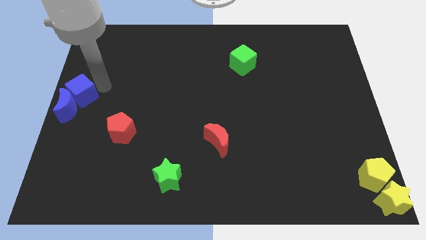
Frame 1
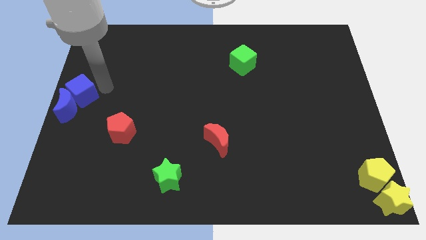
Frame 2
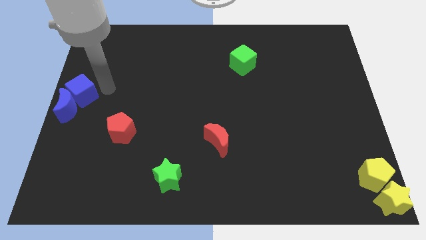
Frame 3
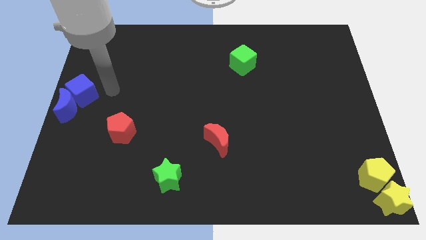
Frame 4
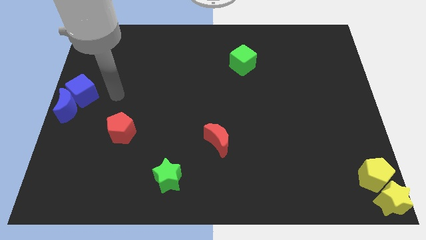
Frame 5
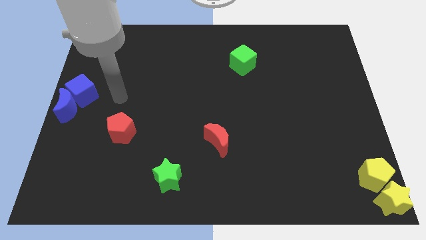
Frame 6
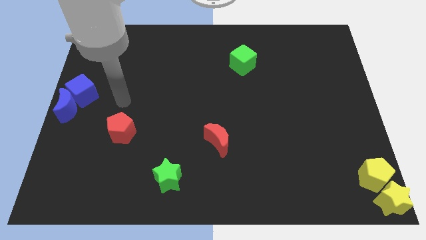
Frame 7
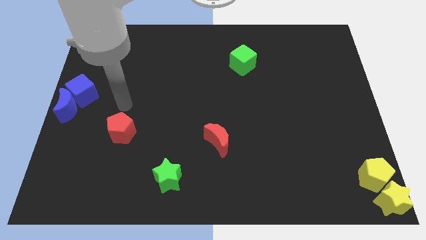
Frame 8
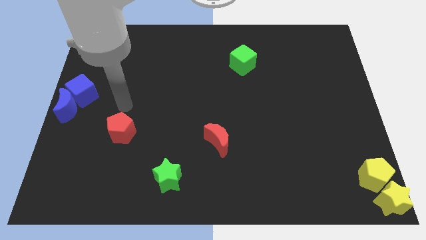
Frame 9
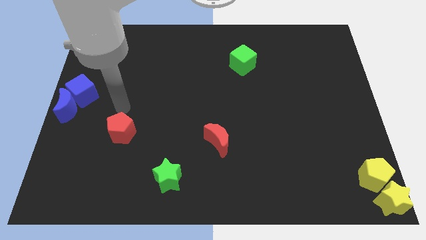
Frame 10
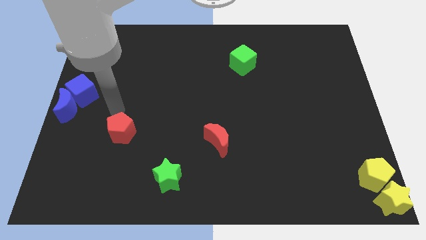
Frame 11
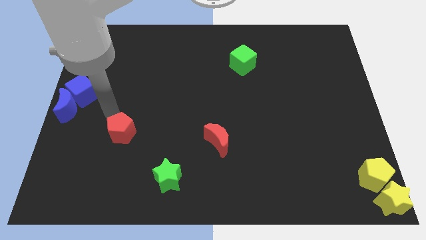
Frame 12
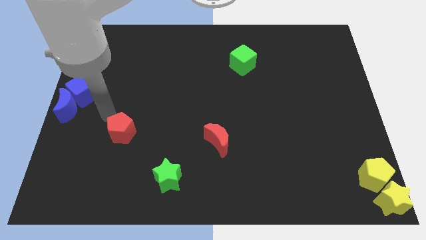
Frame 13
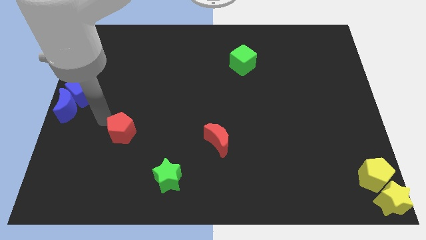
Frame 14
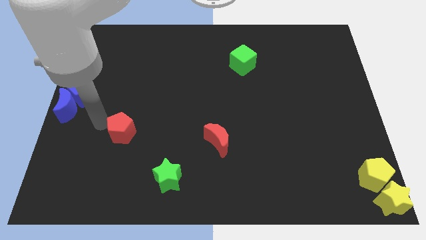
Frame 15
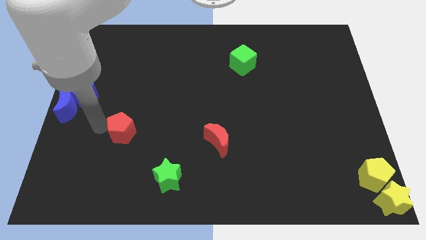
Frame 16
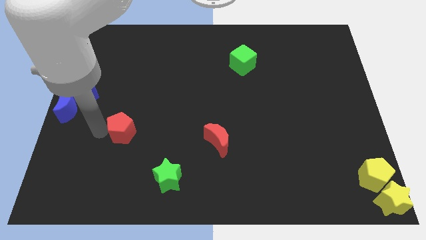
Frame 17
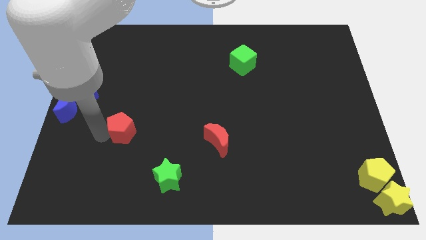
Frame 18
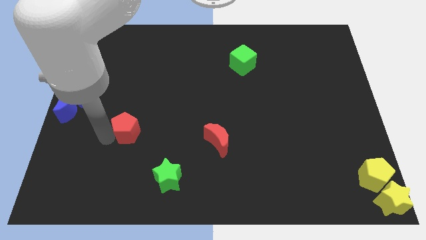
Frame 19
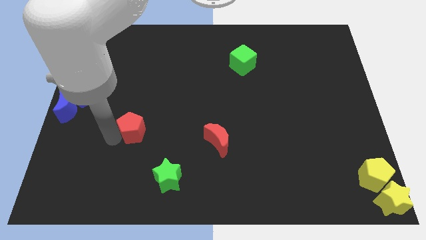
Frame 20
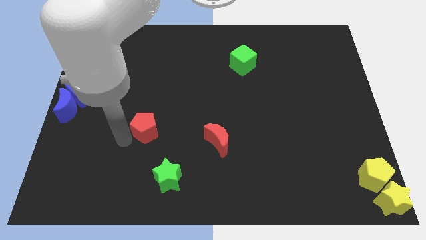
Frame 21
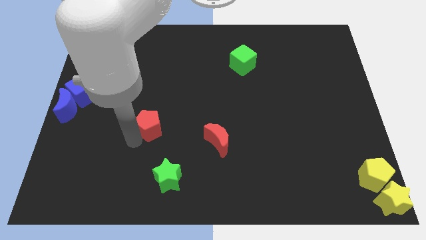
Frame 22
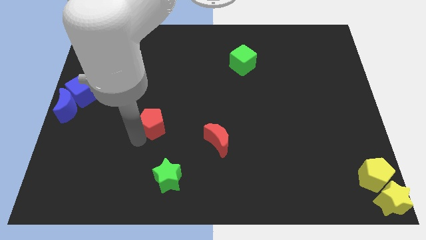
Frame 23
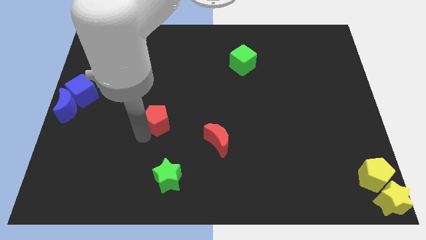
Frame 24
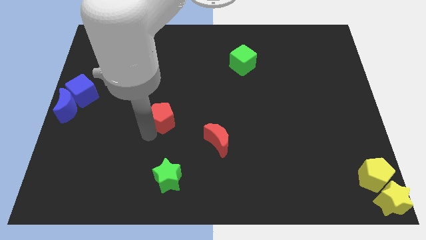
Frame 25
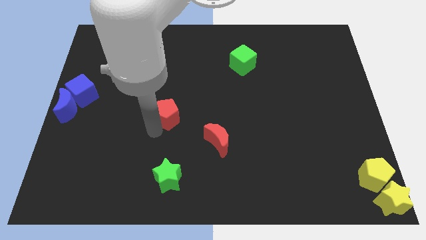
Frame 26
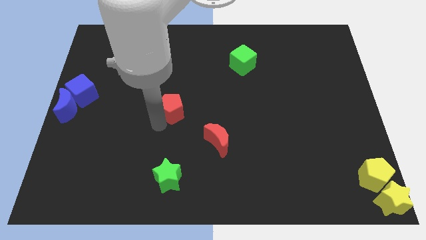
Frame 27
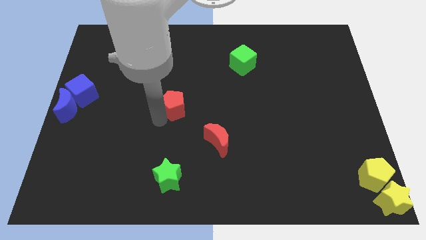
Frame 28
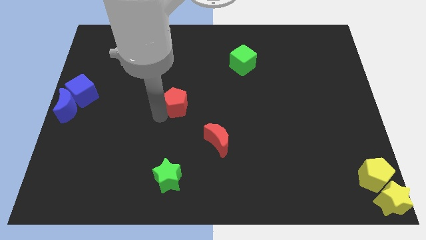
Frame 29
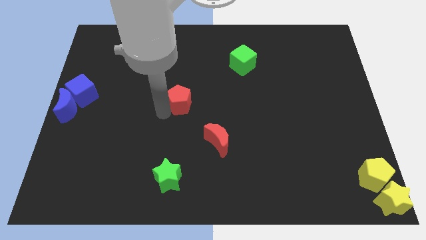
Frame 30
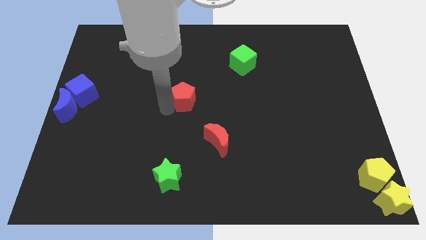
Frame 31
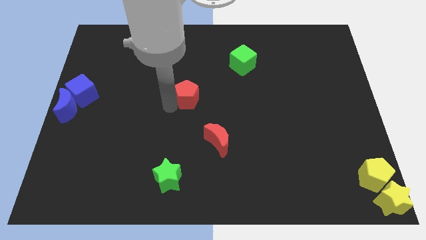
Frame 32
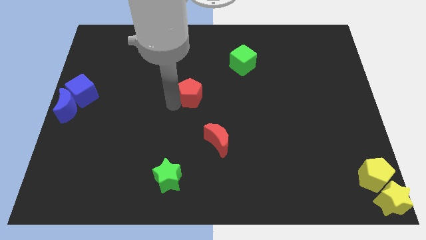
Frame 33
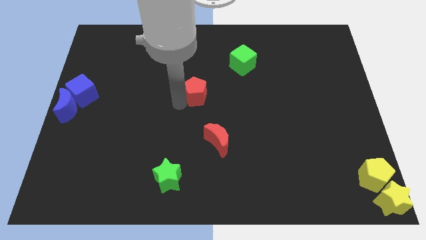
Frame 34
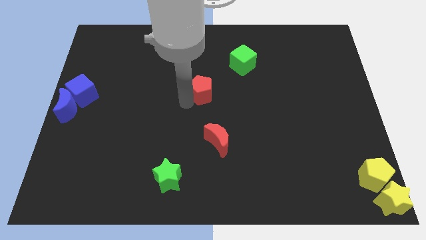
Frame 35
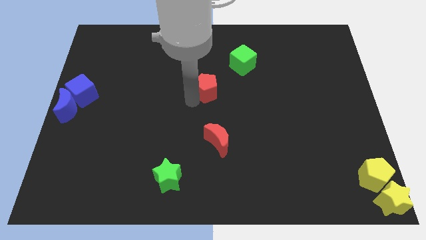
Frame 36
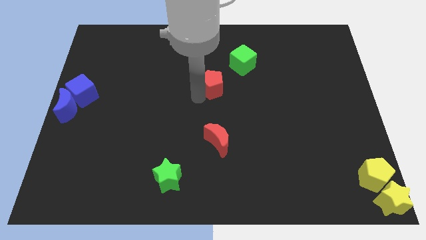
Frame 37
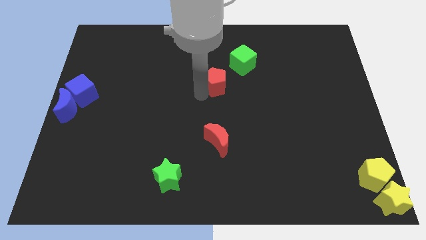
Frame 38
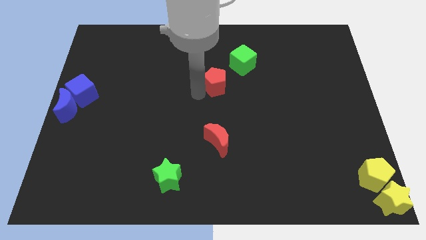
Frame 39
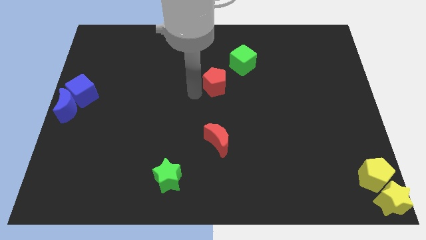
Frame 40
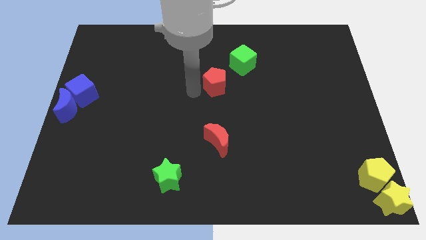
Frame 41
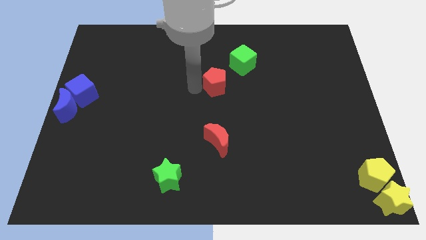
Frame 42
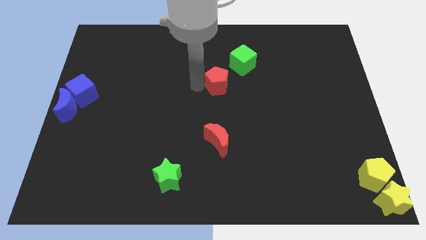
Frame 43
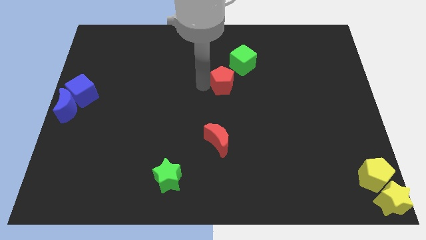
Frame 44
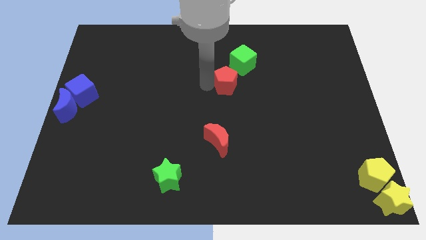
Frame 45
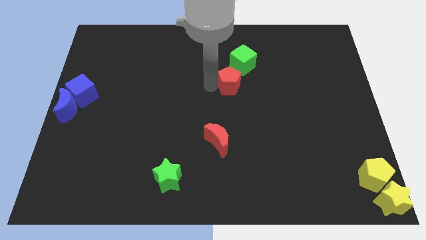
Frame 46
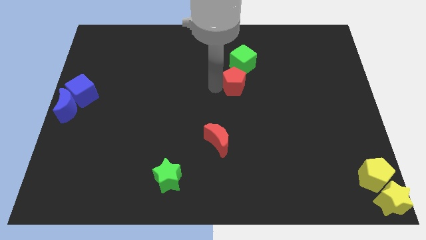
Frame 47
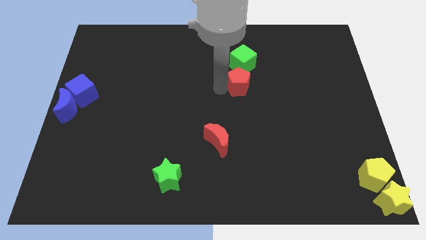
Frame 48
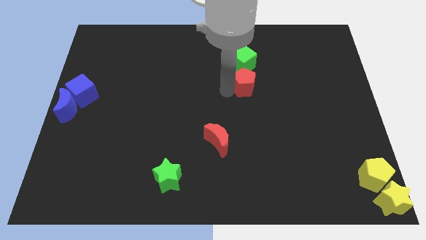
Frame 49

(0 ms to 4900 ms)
place the red pentagon at the bottom of green cube

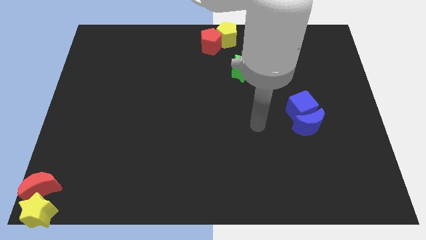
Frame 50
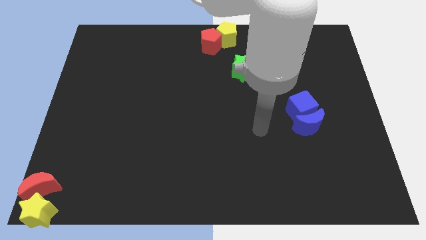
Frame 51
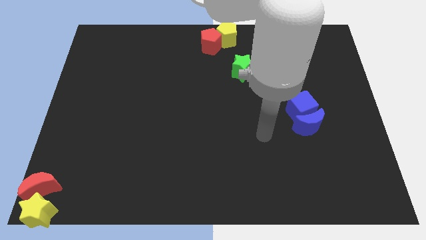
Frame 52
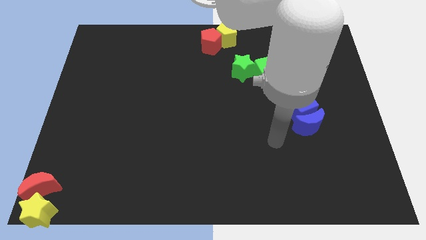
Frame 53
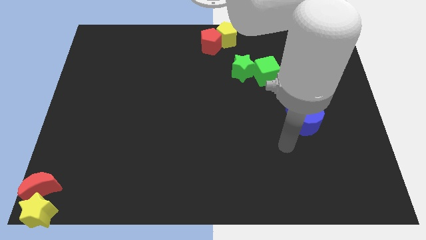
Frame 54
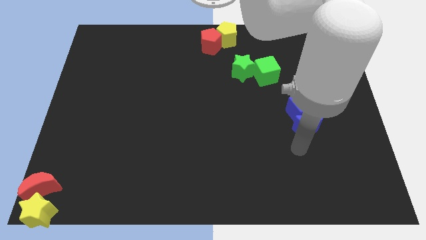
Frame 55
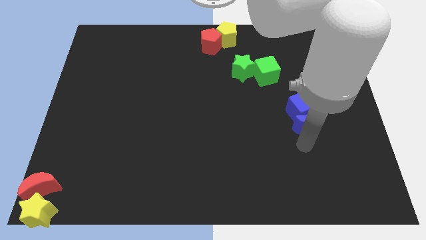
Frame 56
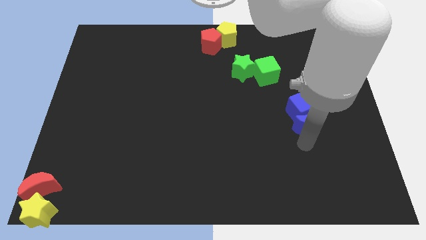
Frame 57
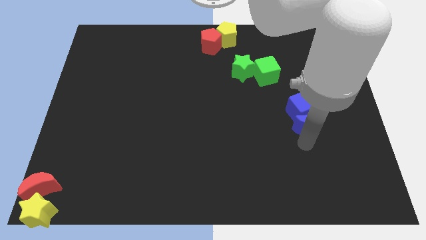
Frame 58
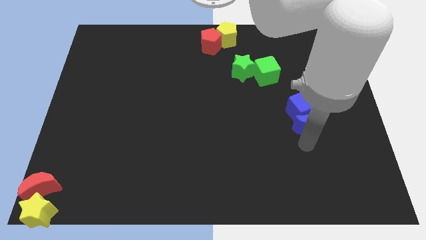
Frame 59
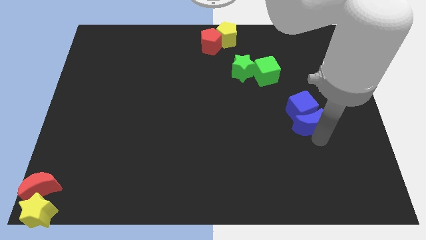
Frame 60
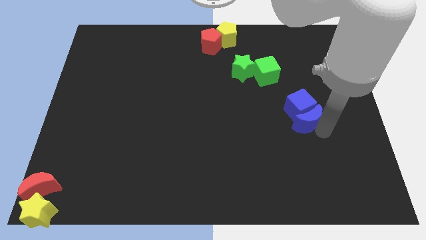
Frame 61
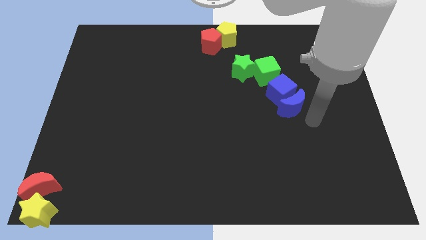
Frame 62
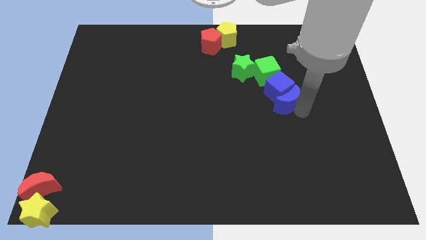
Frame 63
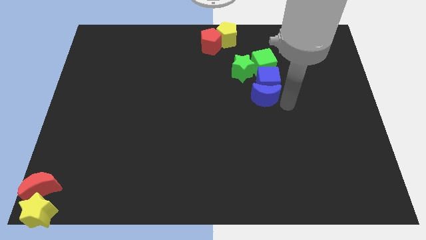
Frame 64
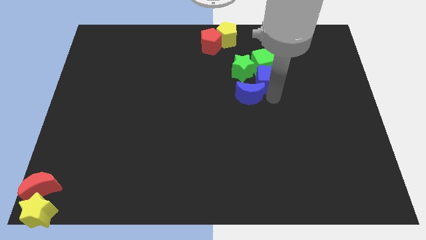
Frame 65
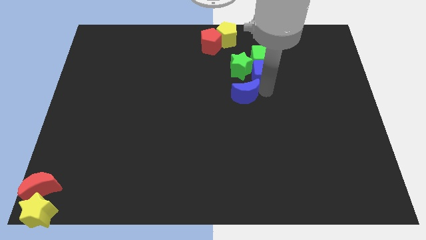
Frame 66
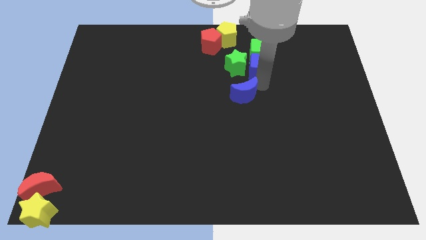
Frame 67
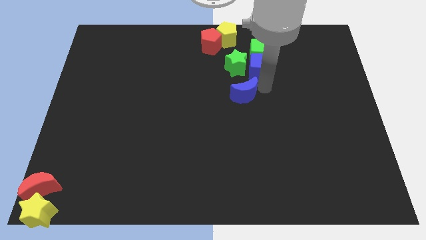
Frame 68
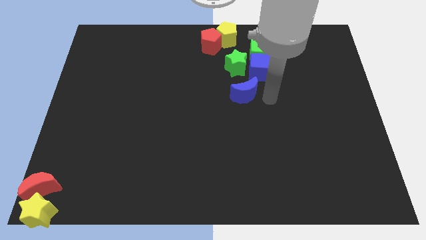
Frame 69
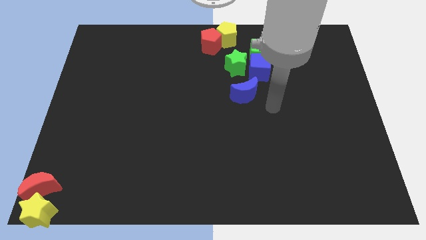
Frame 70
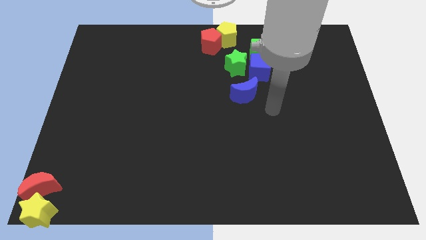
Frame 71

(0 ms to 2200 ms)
move the blue moon at the bottom of the green star

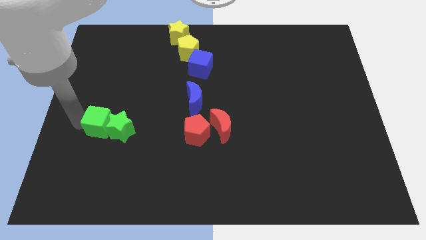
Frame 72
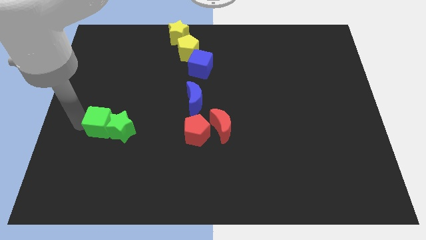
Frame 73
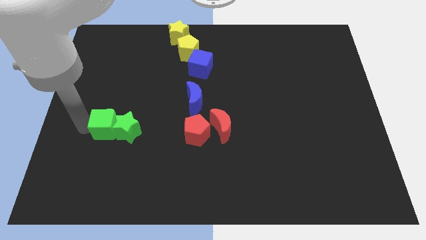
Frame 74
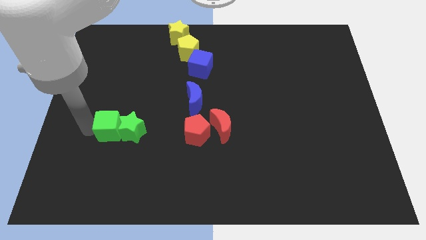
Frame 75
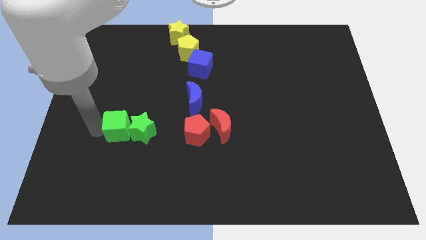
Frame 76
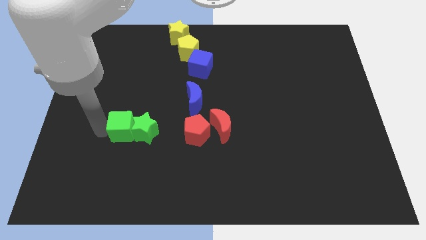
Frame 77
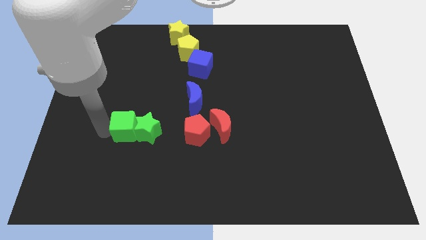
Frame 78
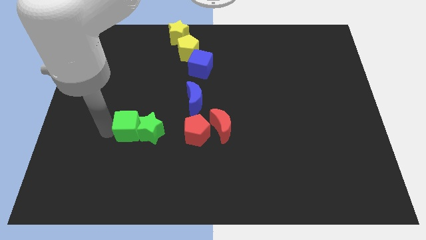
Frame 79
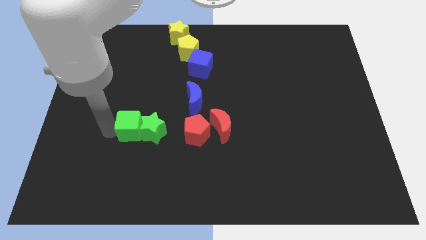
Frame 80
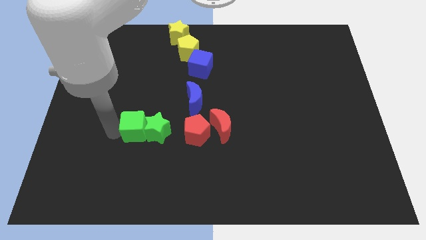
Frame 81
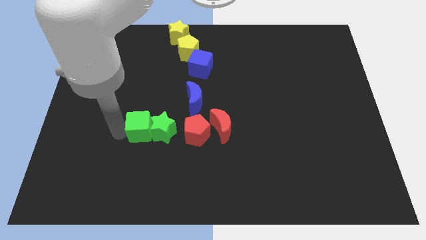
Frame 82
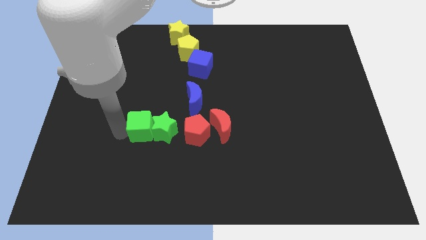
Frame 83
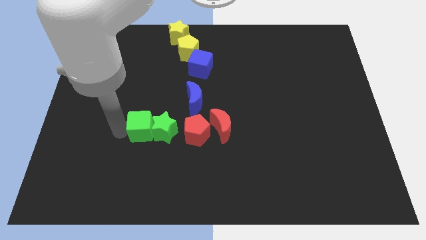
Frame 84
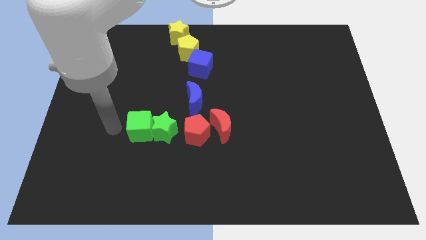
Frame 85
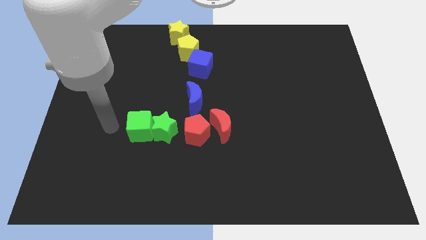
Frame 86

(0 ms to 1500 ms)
push green blocks slightly towards right

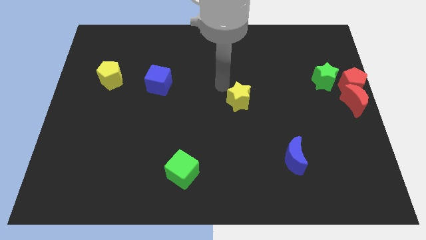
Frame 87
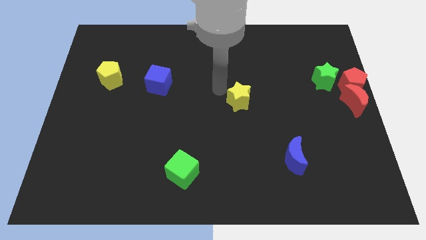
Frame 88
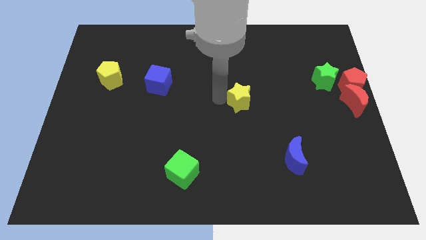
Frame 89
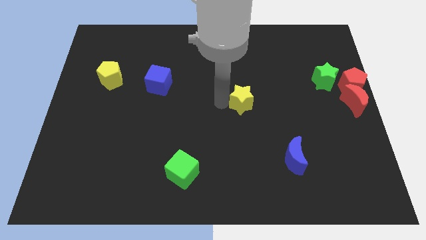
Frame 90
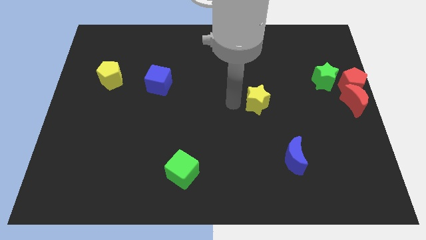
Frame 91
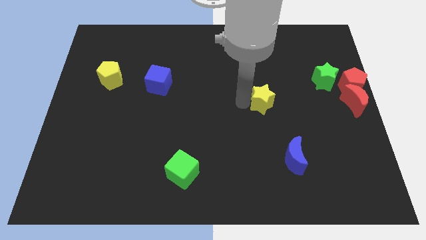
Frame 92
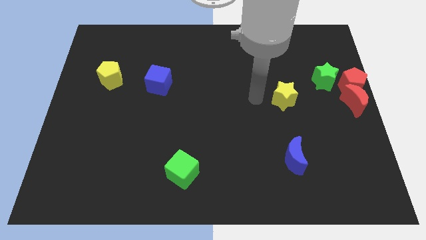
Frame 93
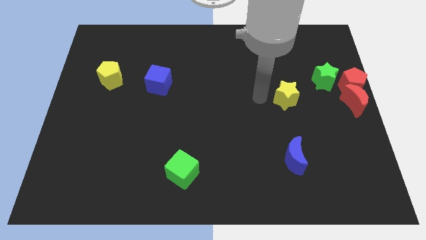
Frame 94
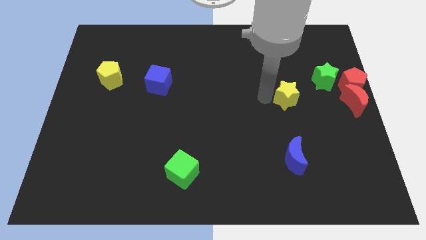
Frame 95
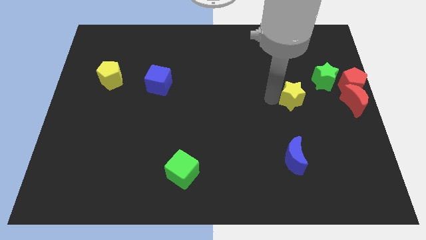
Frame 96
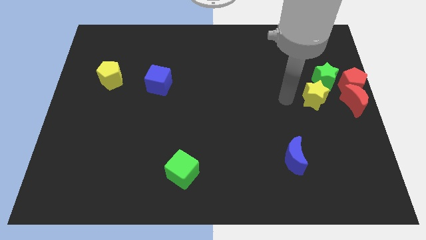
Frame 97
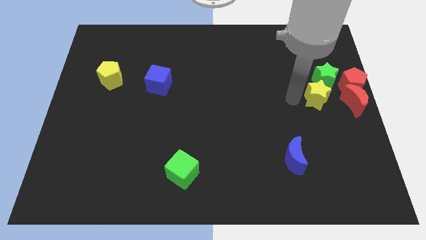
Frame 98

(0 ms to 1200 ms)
push yellow star into green star
